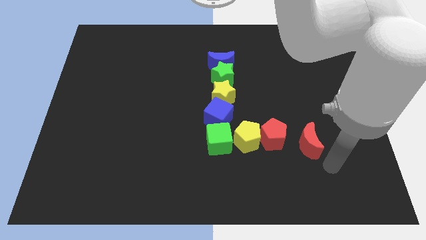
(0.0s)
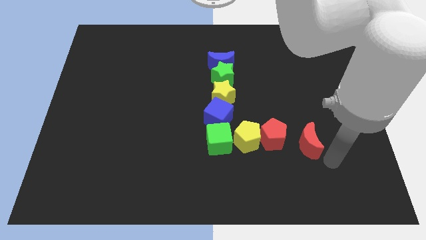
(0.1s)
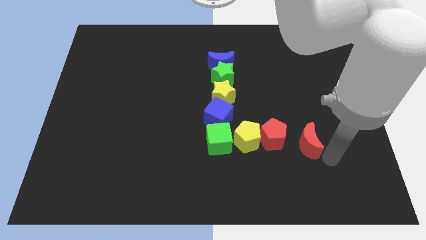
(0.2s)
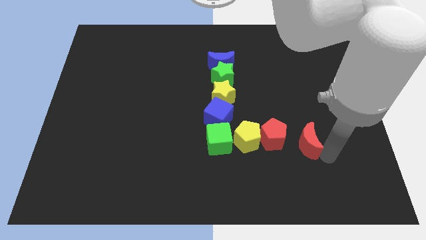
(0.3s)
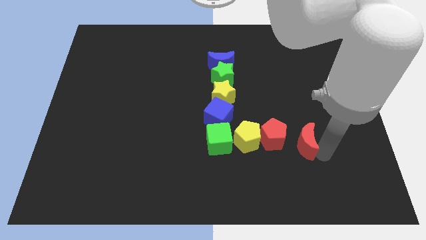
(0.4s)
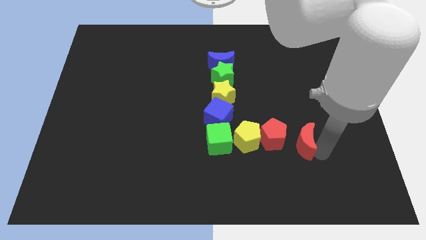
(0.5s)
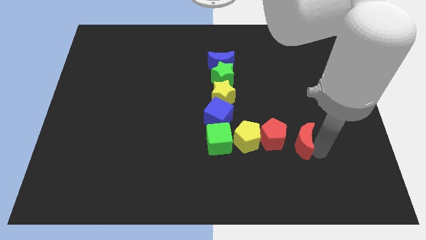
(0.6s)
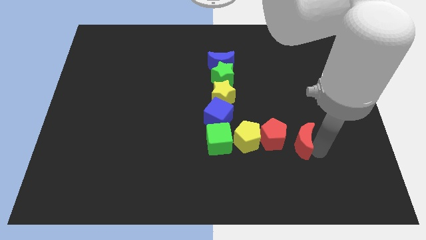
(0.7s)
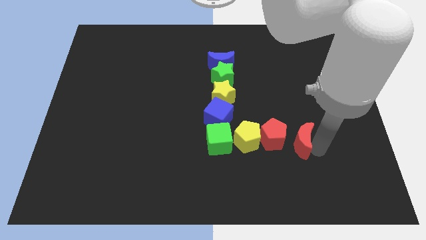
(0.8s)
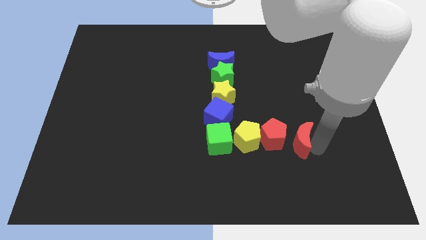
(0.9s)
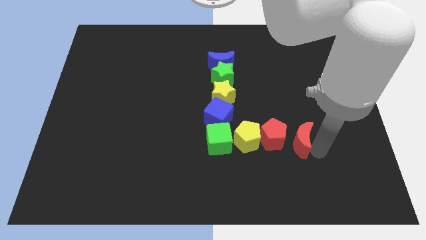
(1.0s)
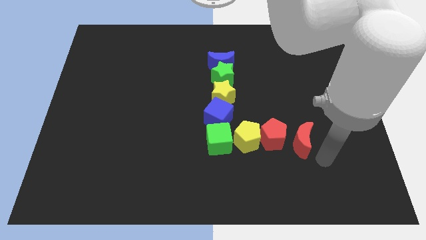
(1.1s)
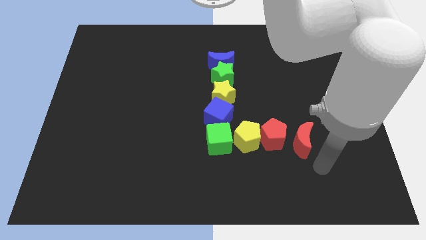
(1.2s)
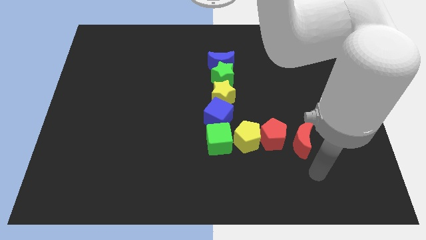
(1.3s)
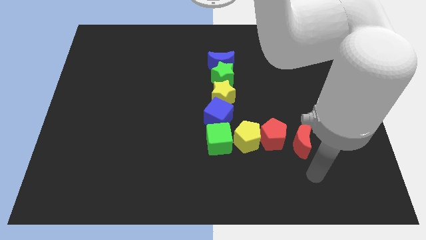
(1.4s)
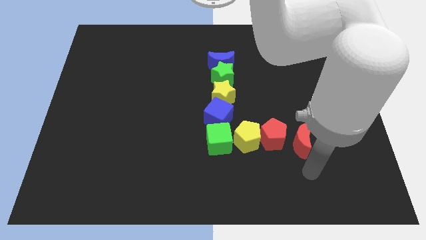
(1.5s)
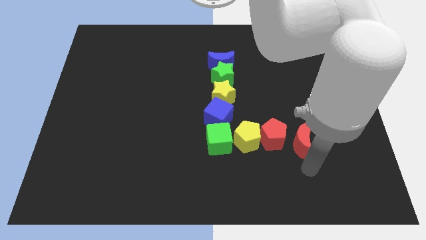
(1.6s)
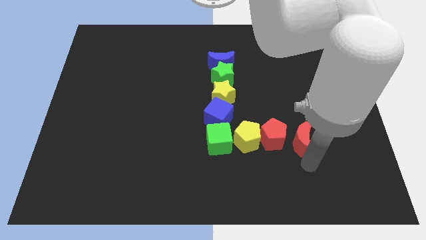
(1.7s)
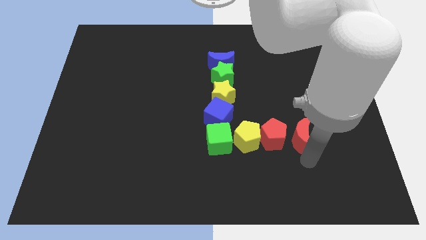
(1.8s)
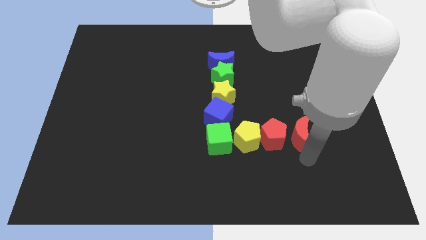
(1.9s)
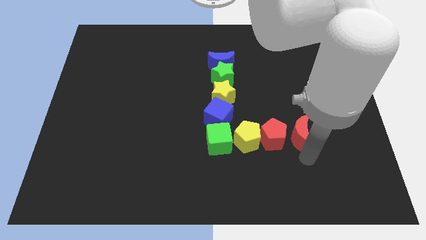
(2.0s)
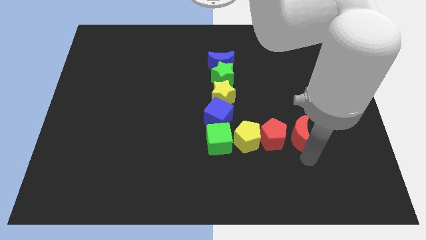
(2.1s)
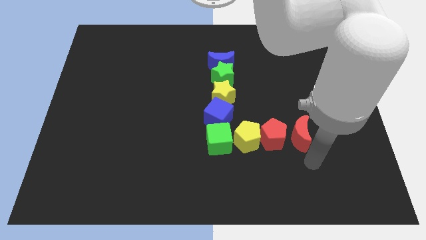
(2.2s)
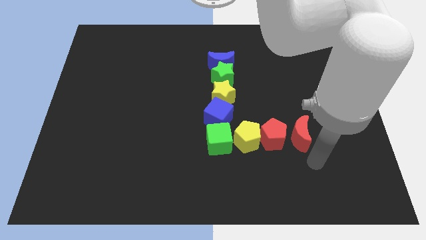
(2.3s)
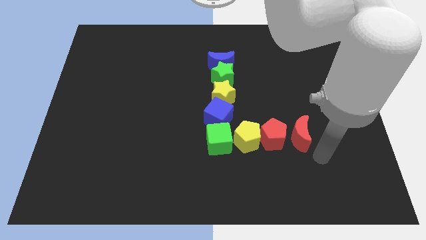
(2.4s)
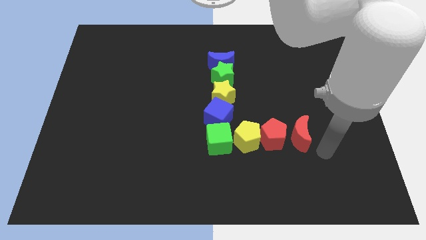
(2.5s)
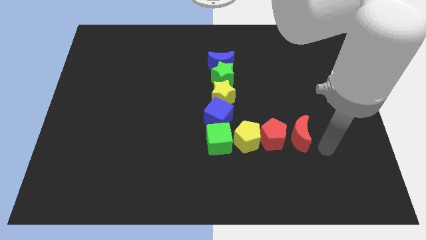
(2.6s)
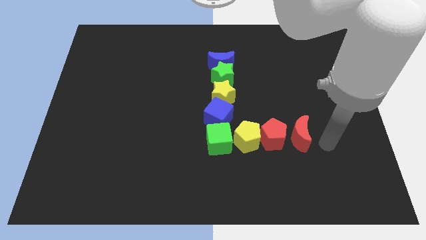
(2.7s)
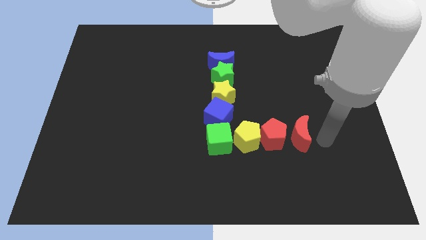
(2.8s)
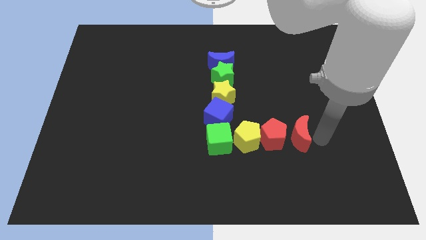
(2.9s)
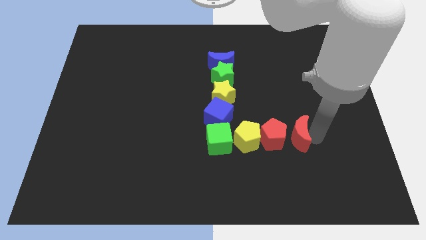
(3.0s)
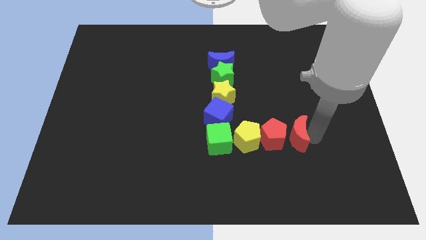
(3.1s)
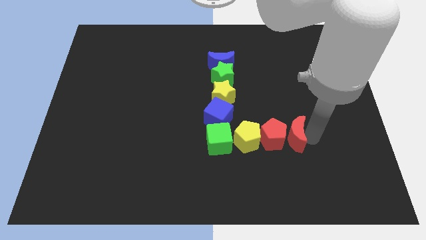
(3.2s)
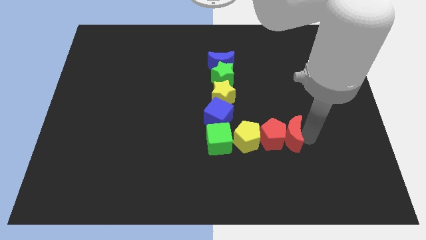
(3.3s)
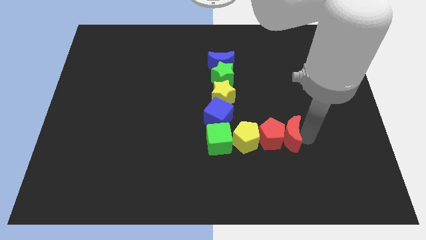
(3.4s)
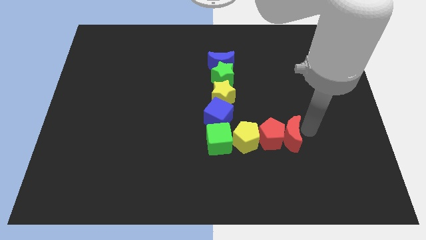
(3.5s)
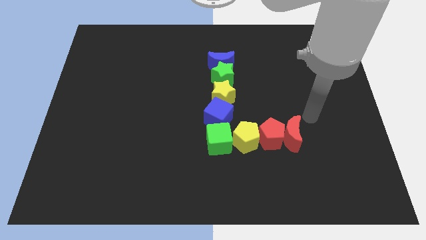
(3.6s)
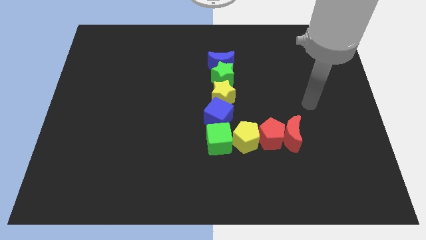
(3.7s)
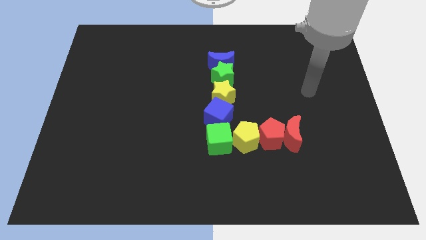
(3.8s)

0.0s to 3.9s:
place the red crescent right to the red pentagon

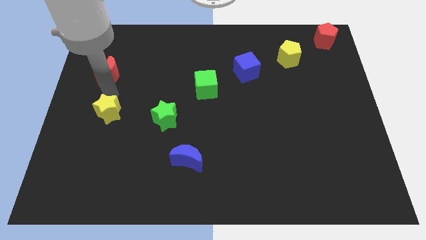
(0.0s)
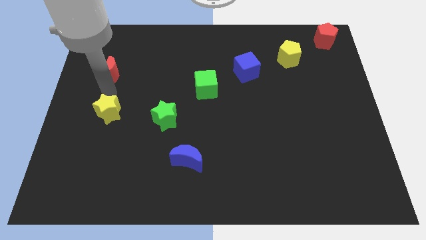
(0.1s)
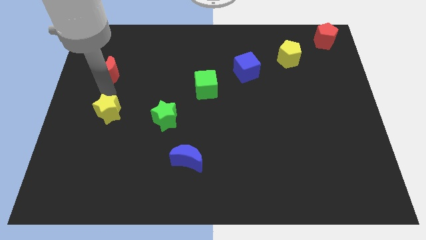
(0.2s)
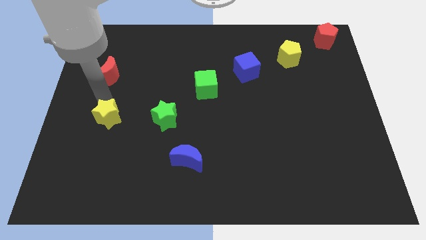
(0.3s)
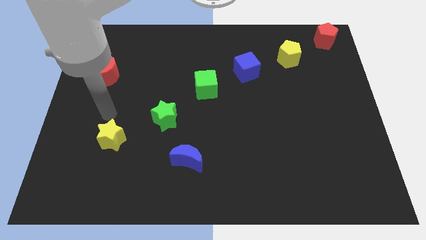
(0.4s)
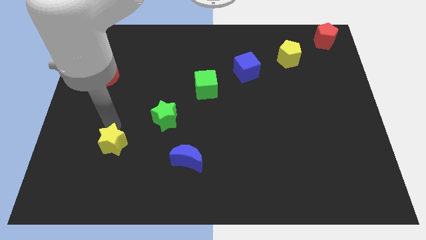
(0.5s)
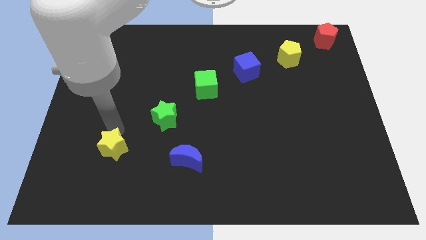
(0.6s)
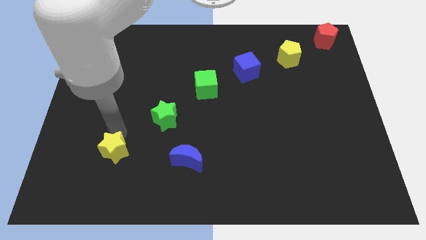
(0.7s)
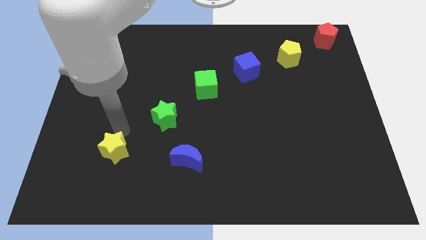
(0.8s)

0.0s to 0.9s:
place yellow star to the left of green star

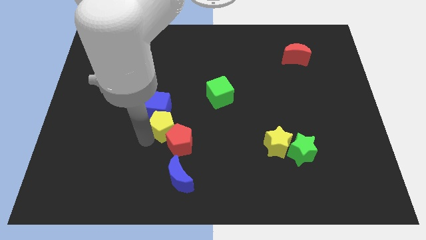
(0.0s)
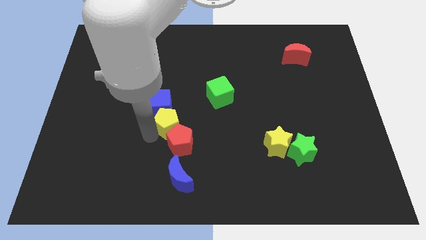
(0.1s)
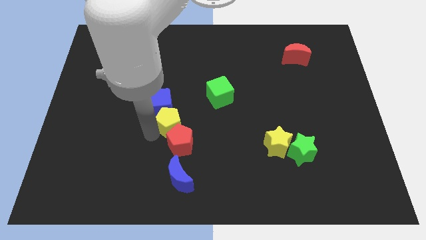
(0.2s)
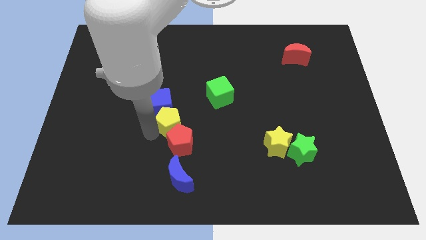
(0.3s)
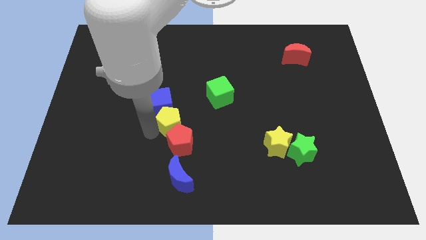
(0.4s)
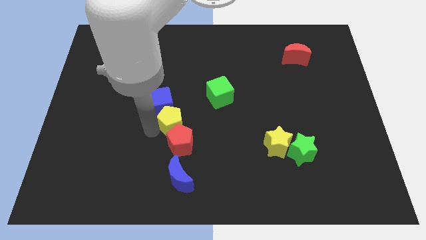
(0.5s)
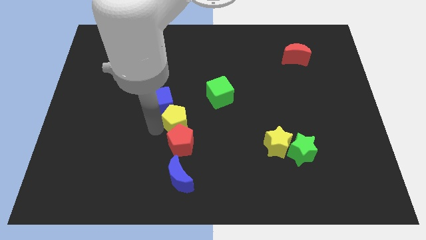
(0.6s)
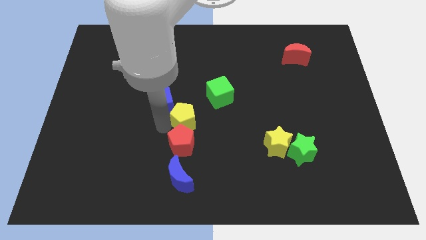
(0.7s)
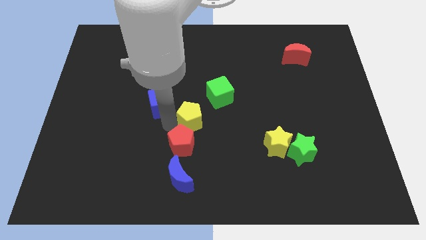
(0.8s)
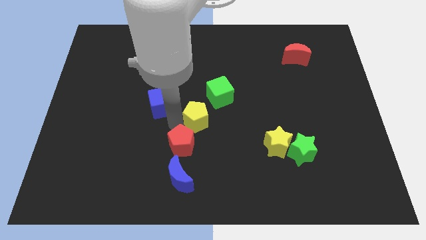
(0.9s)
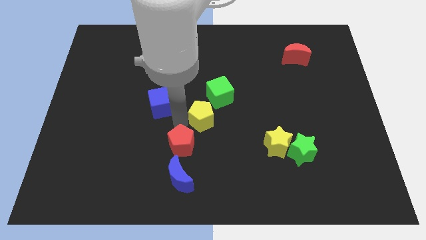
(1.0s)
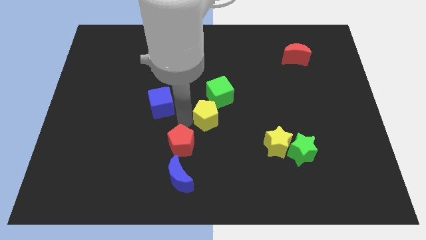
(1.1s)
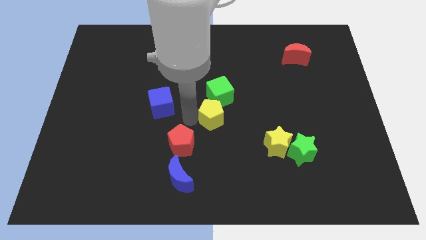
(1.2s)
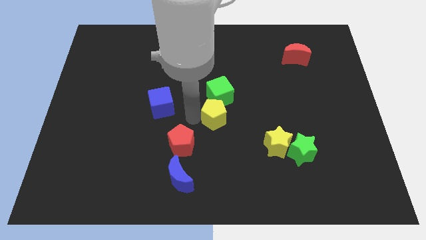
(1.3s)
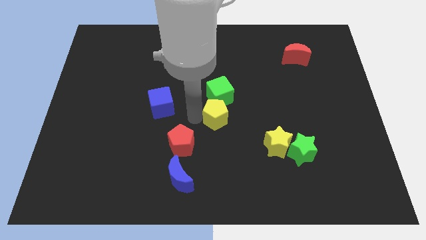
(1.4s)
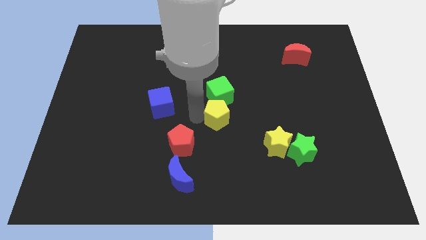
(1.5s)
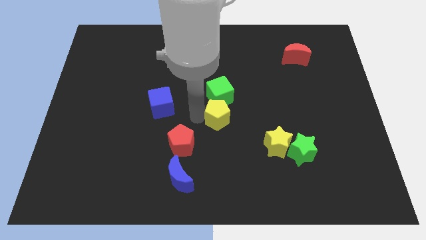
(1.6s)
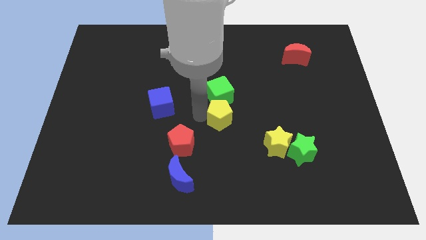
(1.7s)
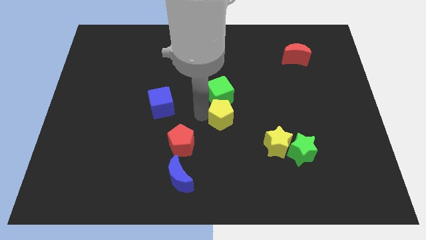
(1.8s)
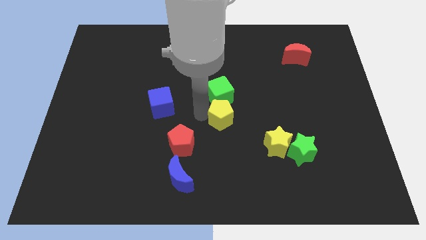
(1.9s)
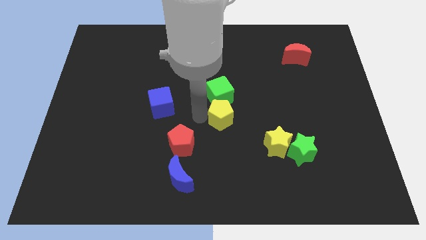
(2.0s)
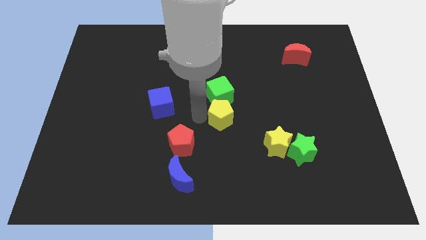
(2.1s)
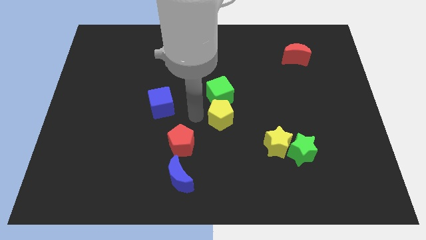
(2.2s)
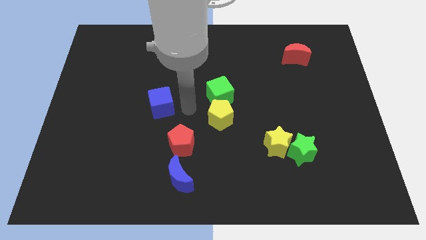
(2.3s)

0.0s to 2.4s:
push the yellow pentagon vertically to the bottom of the green cube

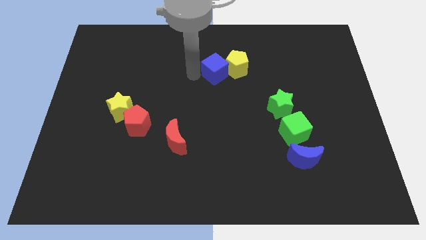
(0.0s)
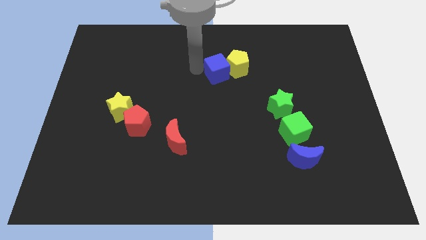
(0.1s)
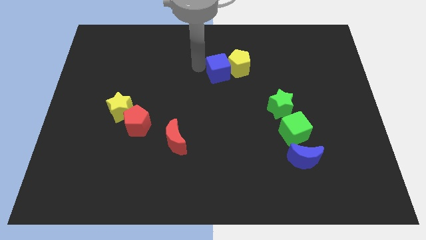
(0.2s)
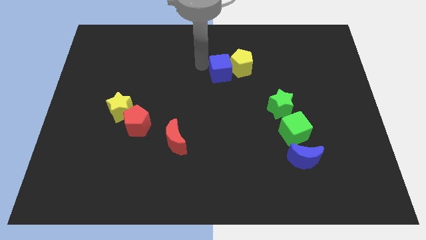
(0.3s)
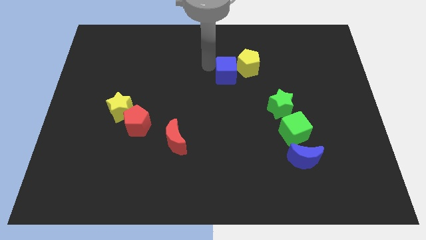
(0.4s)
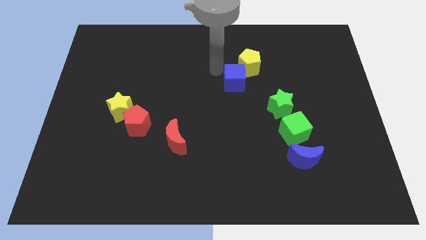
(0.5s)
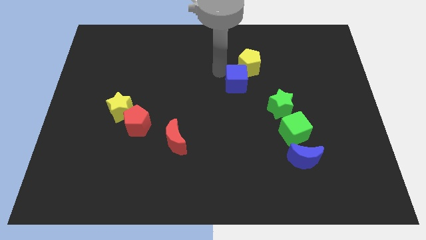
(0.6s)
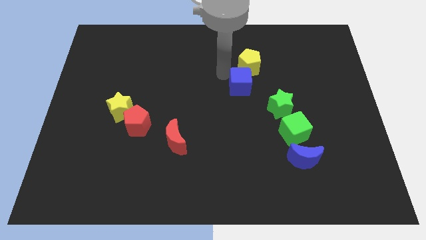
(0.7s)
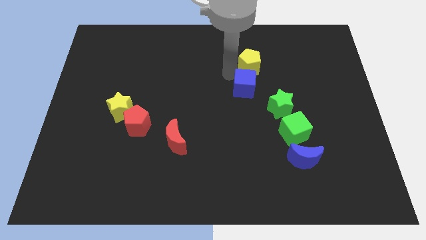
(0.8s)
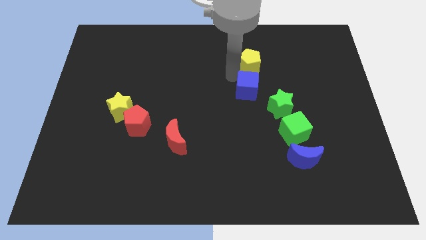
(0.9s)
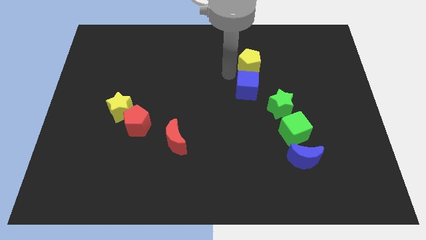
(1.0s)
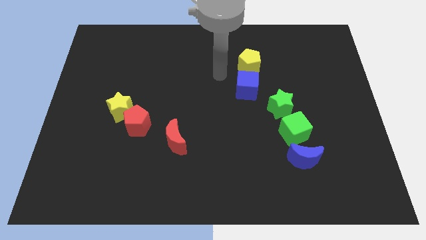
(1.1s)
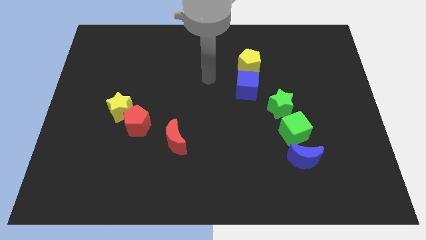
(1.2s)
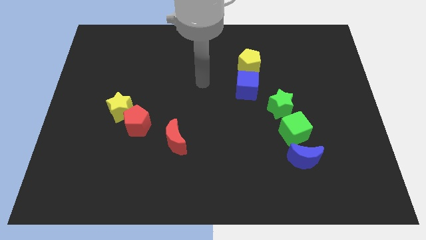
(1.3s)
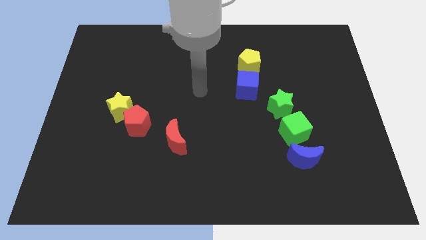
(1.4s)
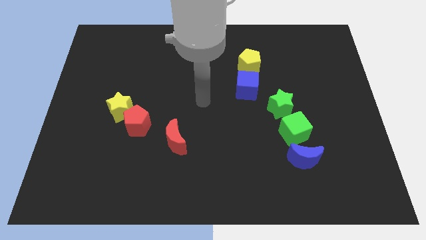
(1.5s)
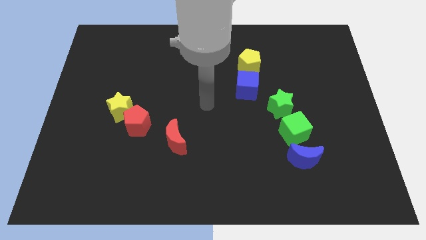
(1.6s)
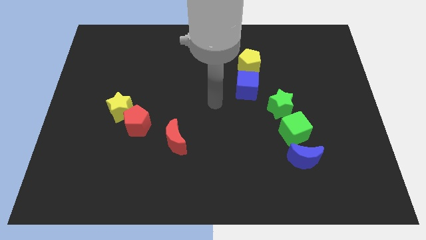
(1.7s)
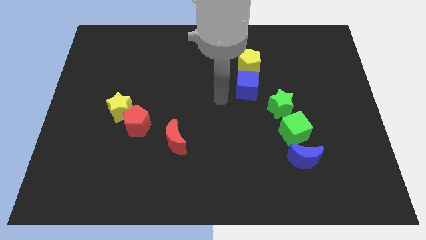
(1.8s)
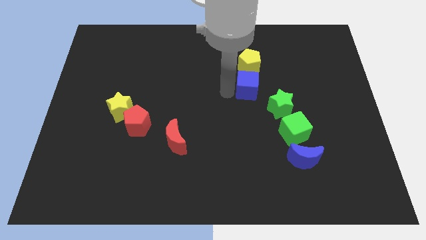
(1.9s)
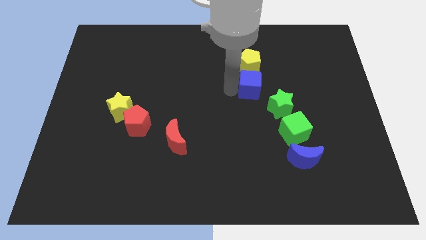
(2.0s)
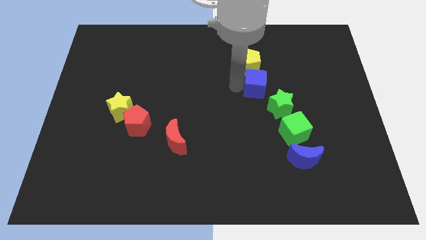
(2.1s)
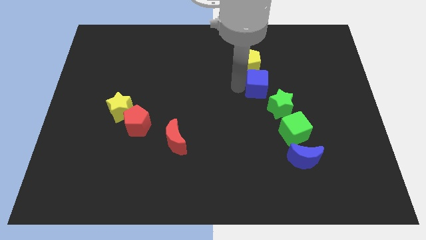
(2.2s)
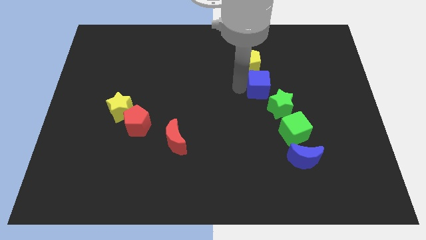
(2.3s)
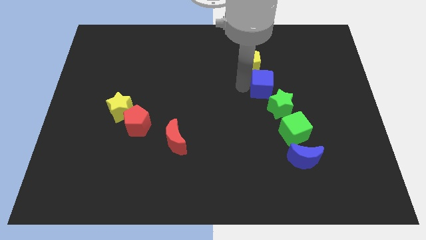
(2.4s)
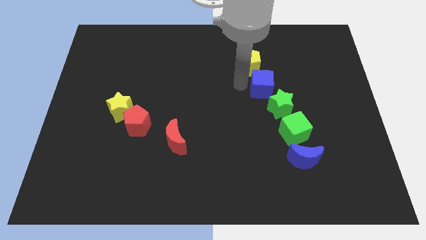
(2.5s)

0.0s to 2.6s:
place the blue cube below the yellow pentagon
